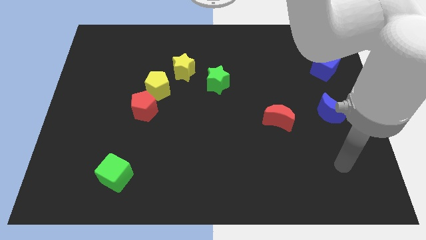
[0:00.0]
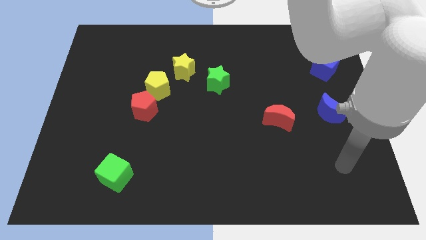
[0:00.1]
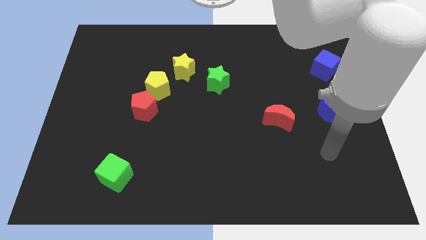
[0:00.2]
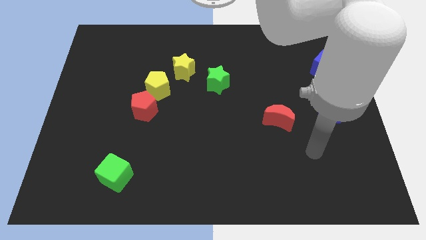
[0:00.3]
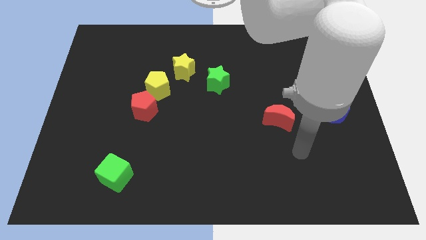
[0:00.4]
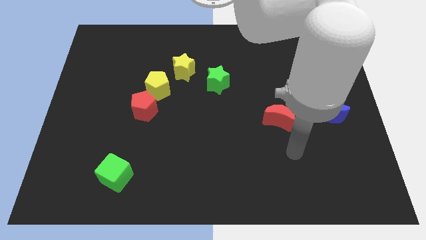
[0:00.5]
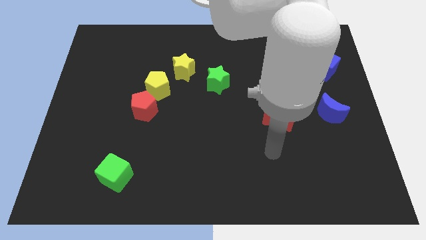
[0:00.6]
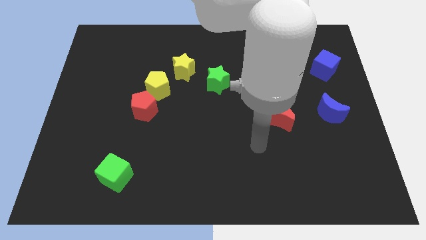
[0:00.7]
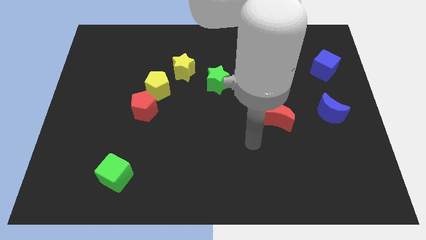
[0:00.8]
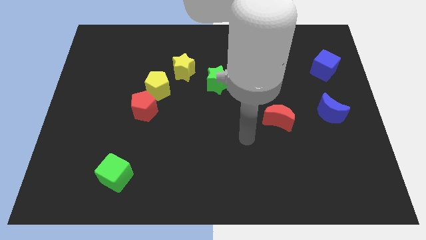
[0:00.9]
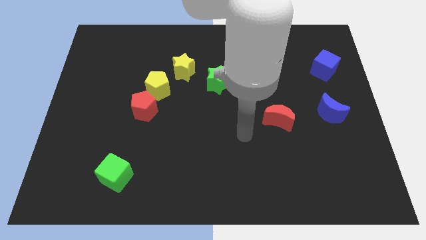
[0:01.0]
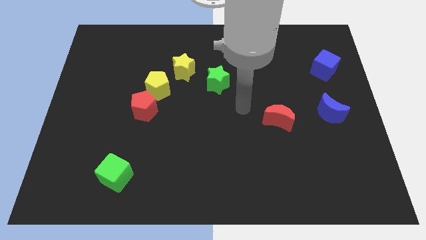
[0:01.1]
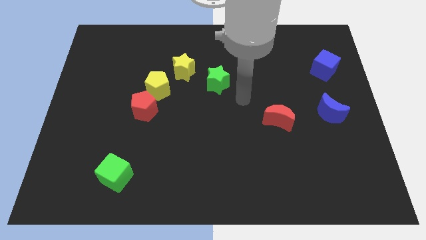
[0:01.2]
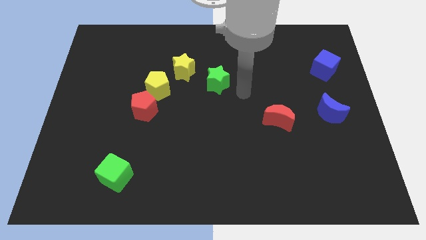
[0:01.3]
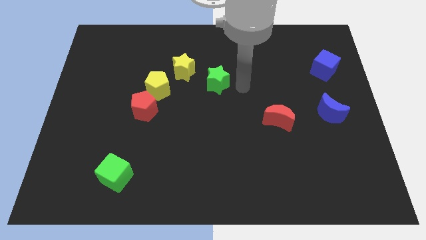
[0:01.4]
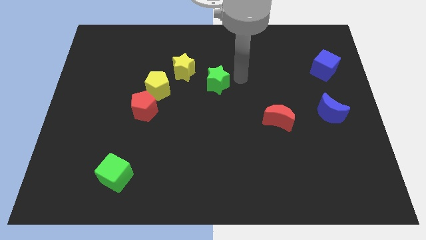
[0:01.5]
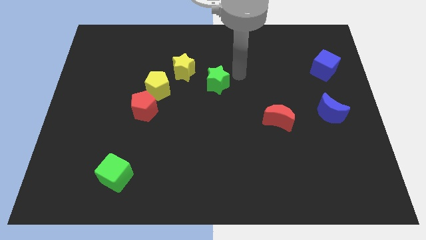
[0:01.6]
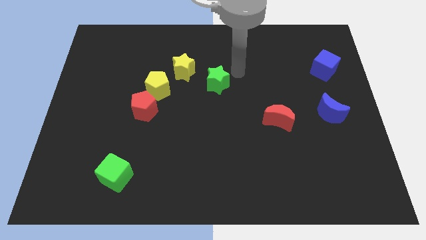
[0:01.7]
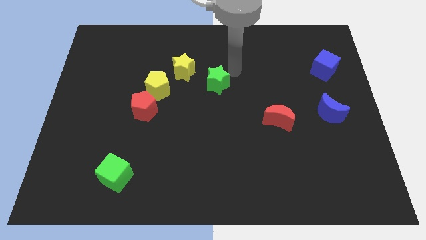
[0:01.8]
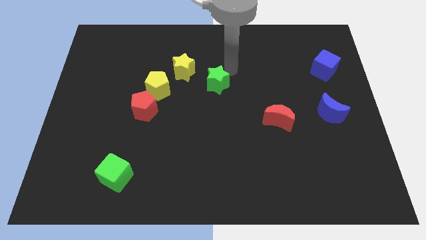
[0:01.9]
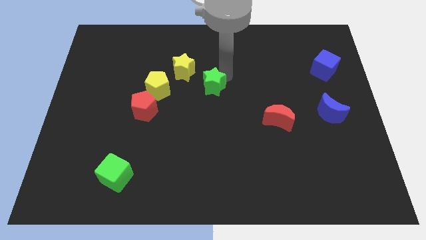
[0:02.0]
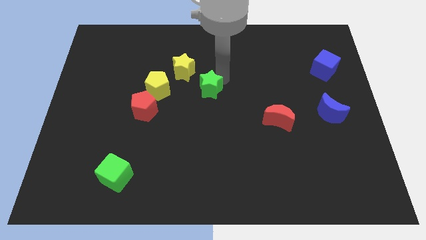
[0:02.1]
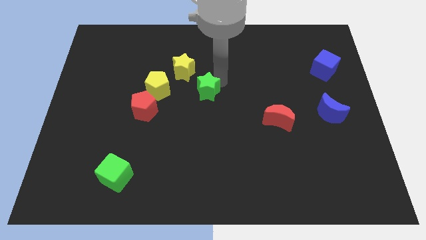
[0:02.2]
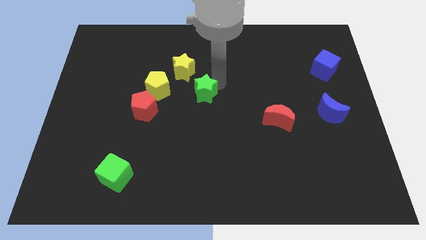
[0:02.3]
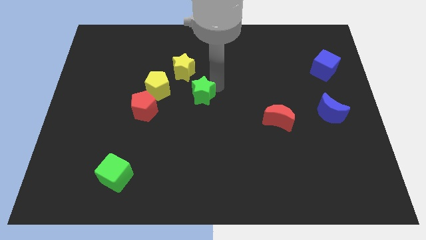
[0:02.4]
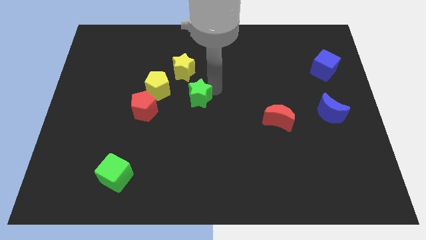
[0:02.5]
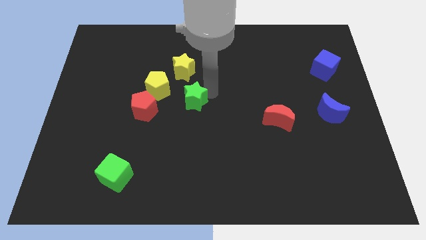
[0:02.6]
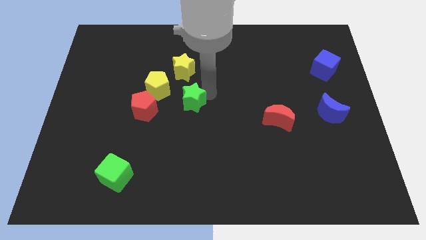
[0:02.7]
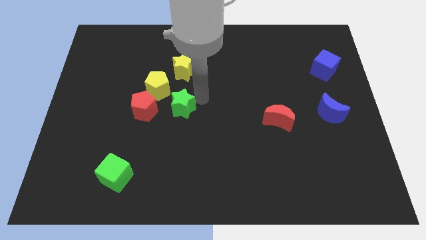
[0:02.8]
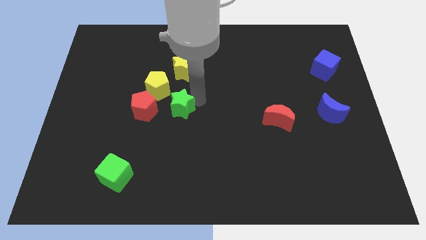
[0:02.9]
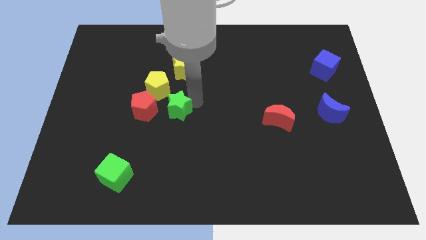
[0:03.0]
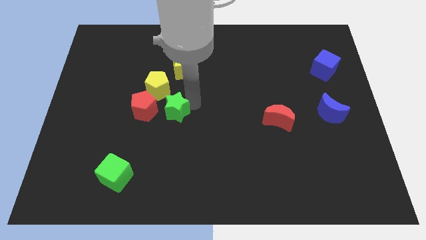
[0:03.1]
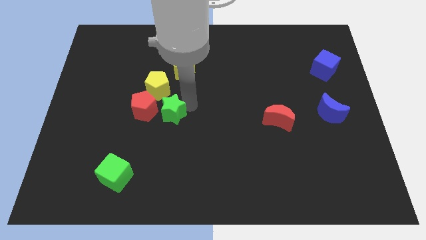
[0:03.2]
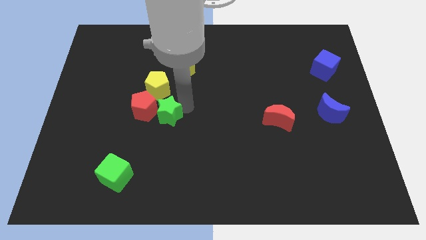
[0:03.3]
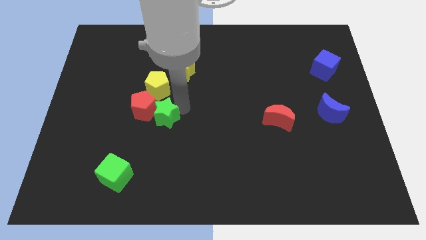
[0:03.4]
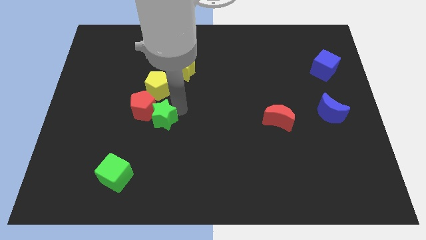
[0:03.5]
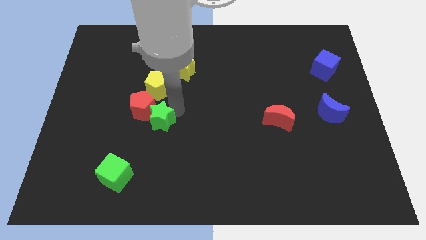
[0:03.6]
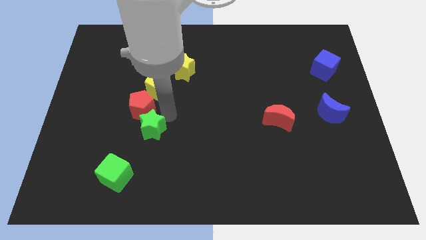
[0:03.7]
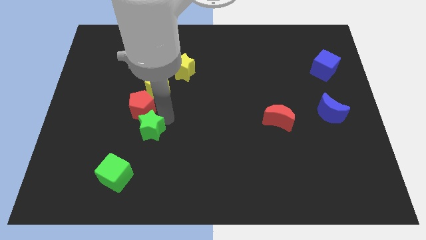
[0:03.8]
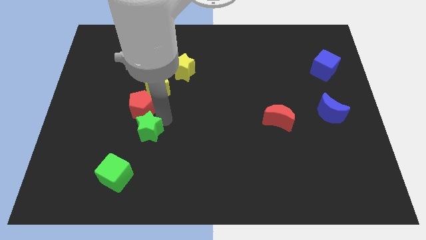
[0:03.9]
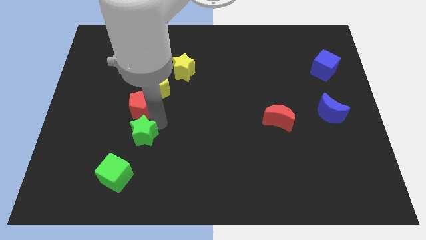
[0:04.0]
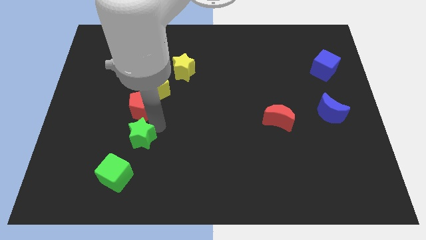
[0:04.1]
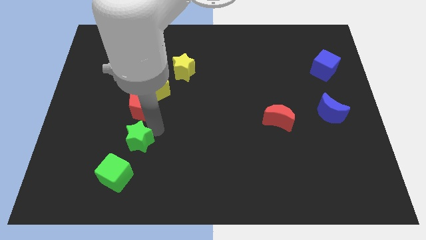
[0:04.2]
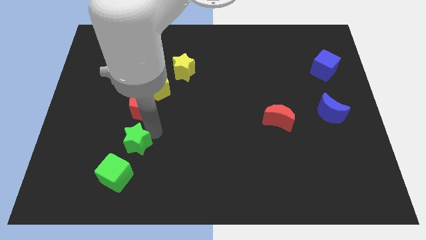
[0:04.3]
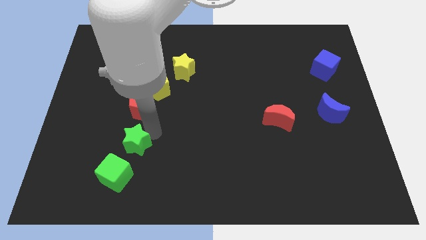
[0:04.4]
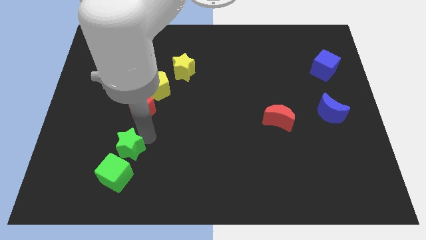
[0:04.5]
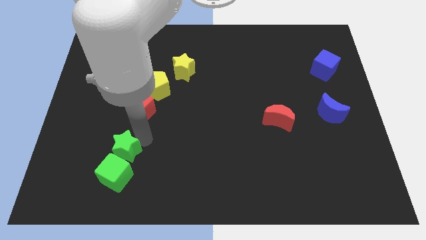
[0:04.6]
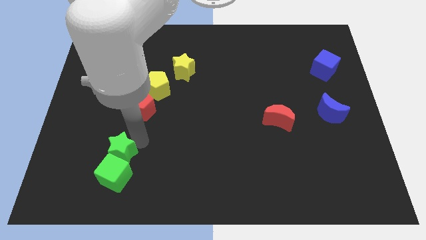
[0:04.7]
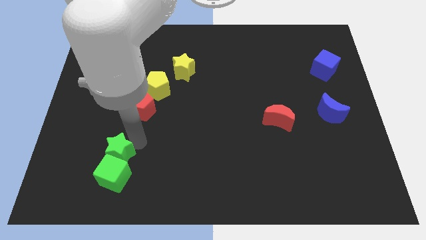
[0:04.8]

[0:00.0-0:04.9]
slide the green star towards the green cube

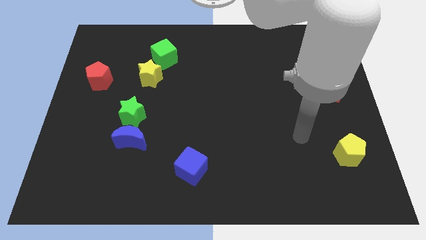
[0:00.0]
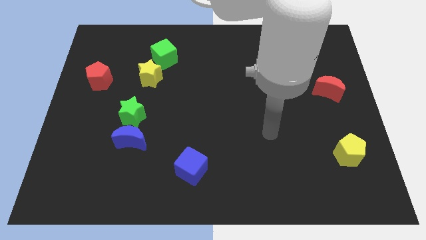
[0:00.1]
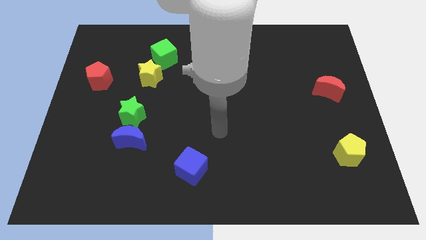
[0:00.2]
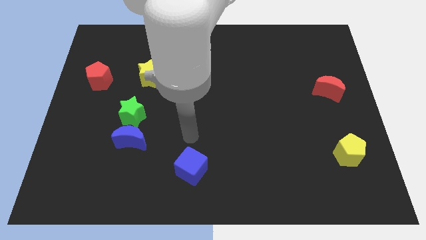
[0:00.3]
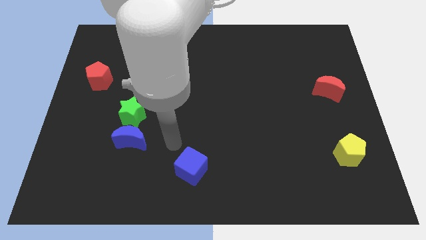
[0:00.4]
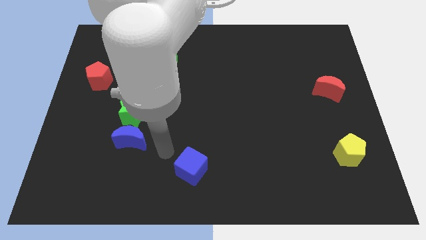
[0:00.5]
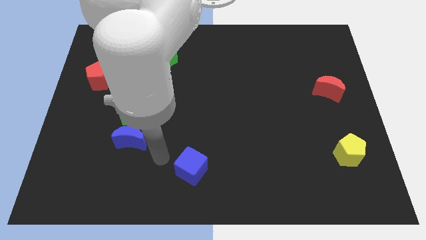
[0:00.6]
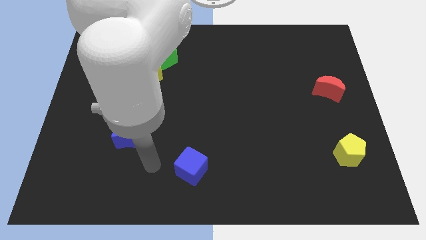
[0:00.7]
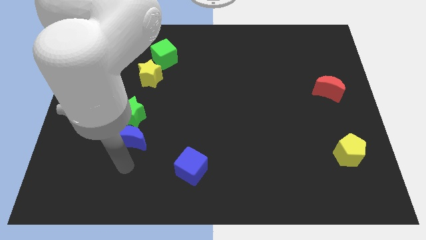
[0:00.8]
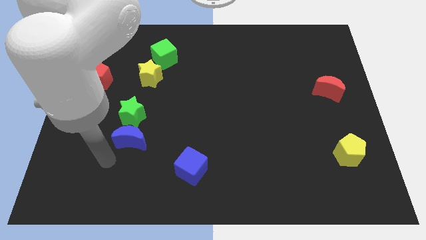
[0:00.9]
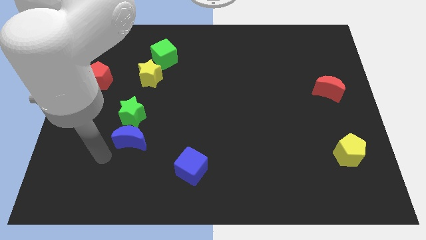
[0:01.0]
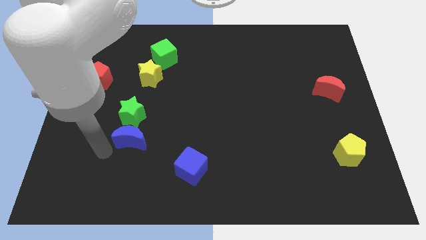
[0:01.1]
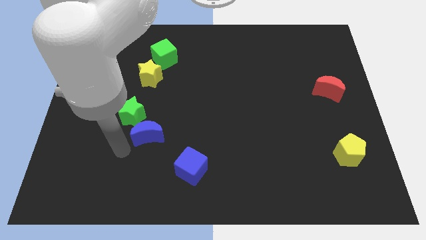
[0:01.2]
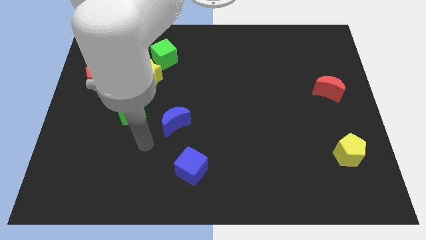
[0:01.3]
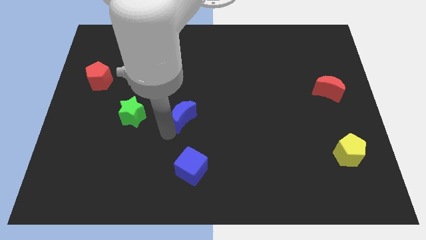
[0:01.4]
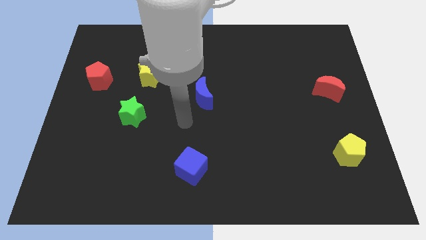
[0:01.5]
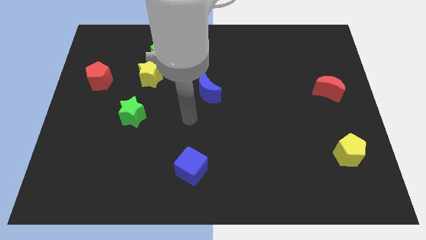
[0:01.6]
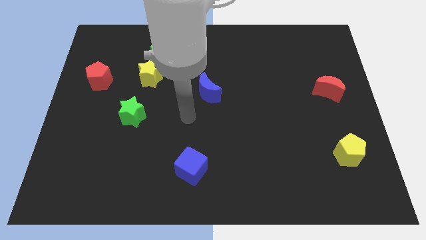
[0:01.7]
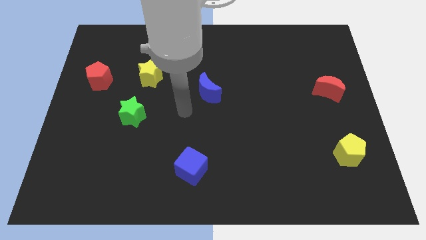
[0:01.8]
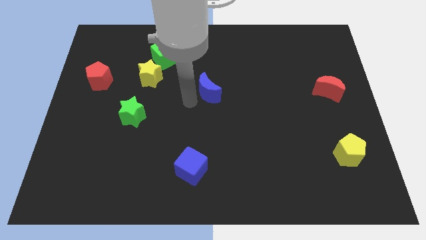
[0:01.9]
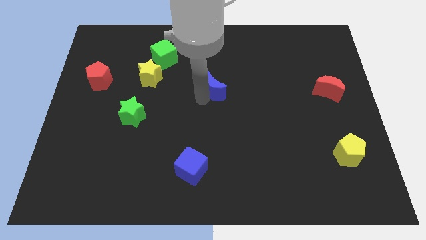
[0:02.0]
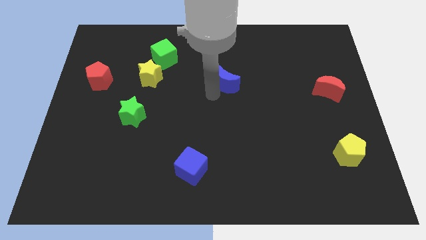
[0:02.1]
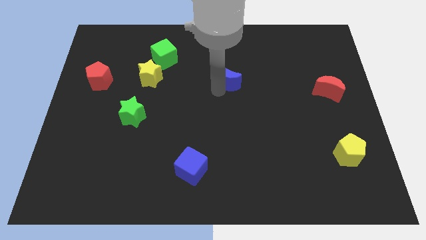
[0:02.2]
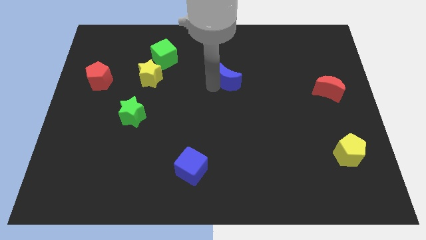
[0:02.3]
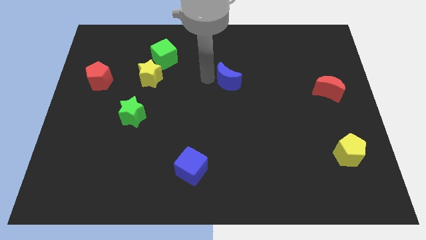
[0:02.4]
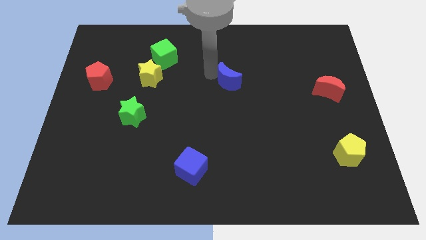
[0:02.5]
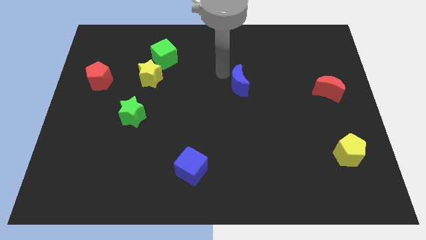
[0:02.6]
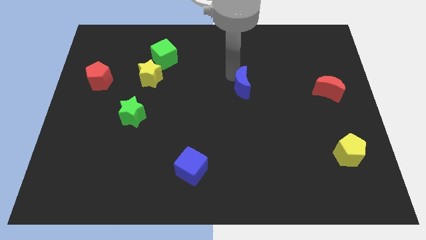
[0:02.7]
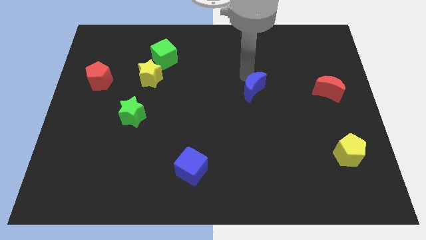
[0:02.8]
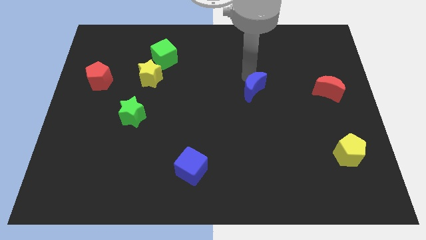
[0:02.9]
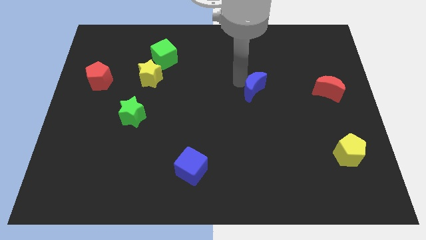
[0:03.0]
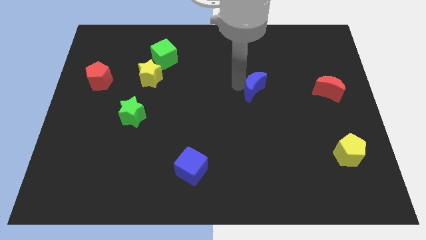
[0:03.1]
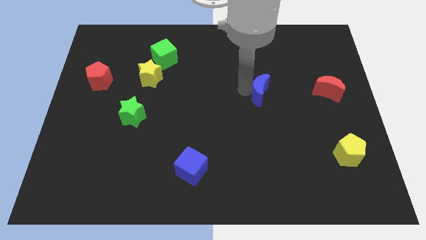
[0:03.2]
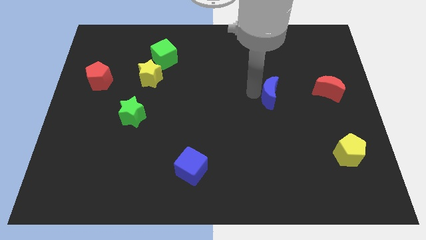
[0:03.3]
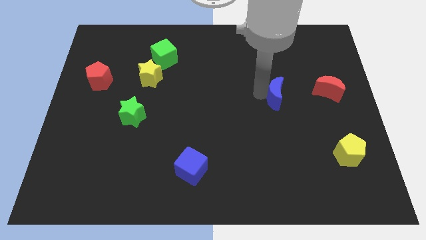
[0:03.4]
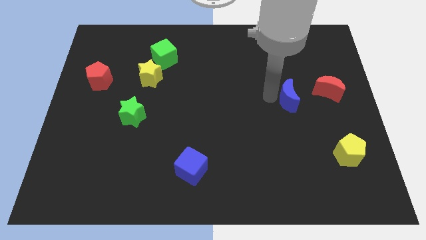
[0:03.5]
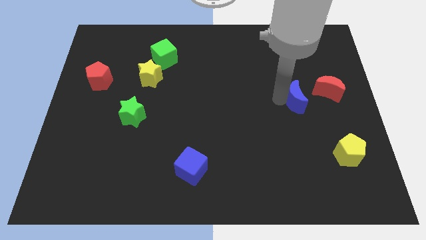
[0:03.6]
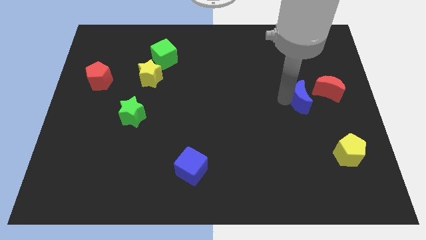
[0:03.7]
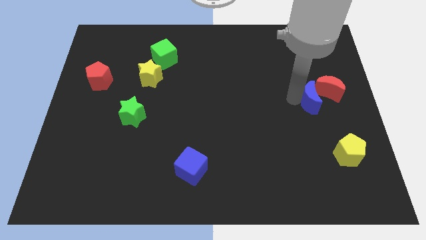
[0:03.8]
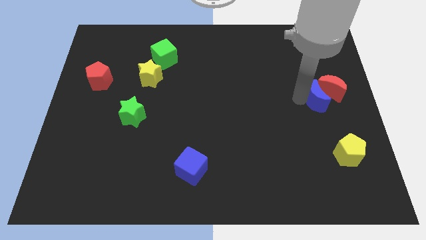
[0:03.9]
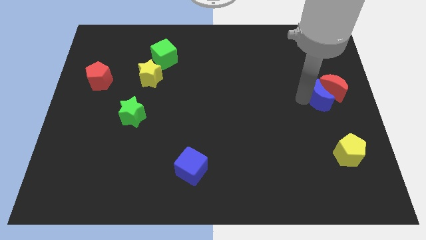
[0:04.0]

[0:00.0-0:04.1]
move the blue moon to the red moon
